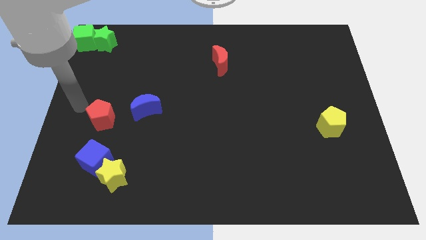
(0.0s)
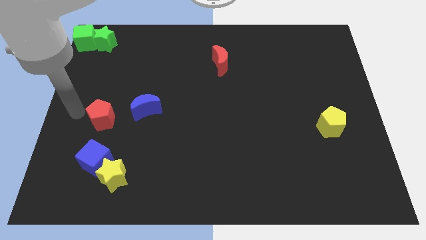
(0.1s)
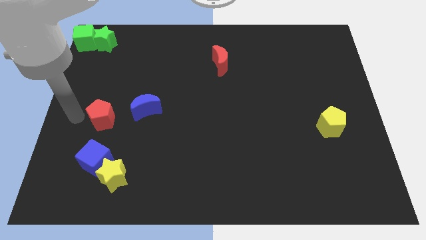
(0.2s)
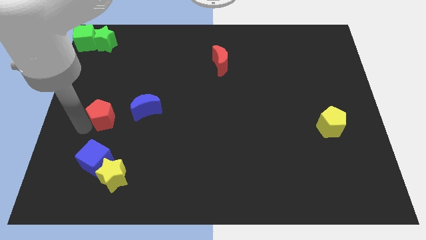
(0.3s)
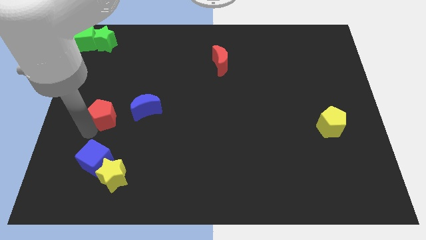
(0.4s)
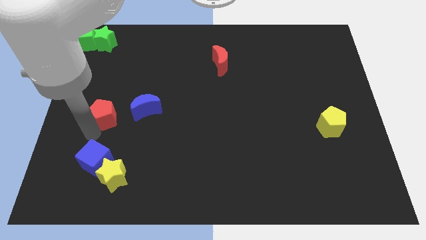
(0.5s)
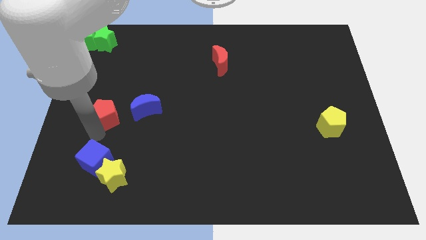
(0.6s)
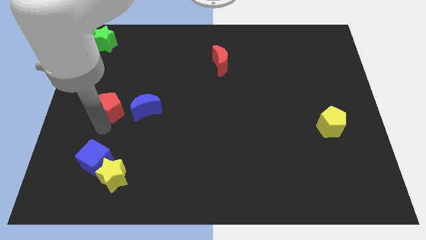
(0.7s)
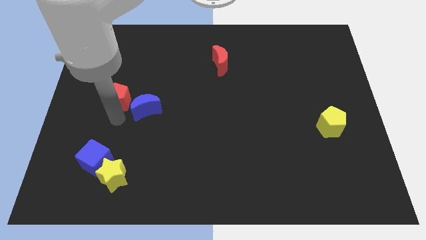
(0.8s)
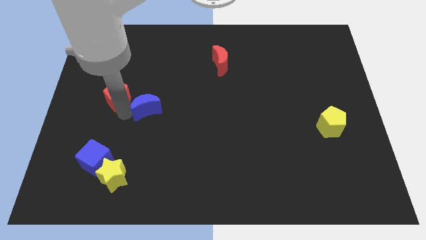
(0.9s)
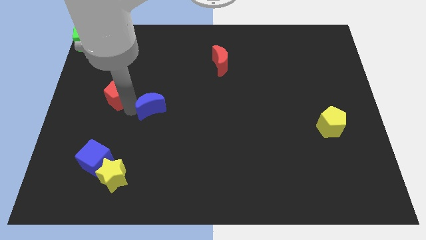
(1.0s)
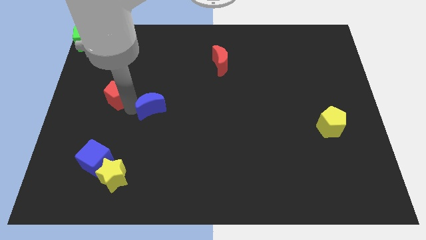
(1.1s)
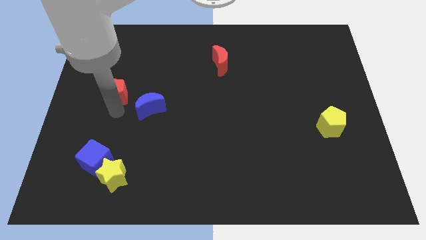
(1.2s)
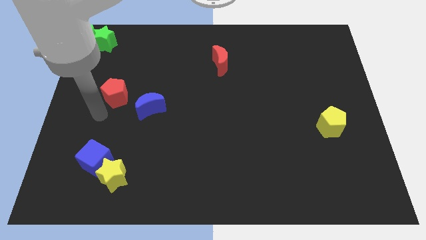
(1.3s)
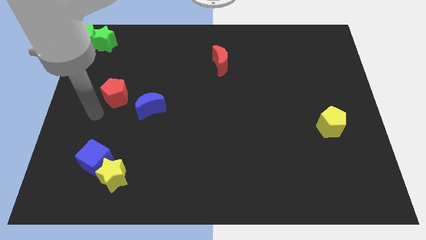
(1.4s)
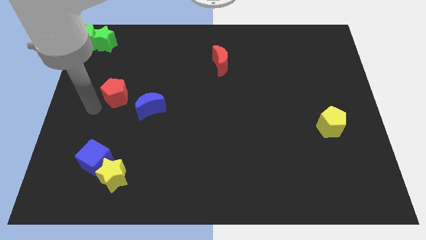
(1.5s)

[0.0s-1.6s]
move the red pentagon diagonally top left to the blue moon

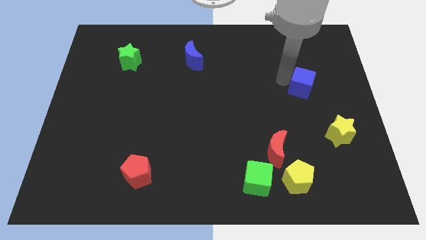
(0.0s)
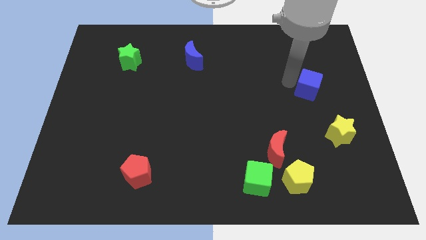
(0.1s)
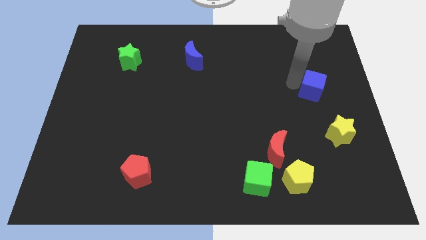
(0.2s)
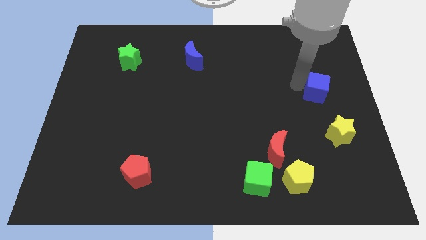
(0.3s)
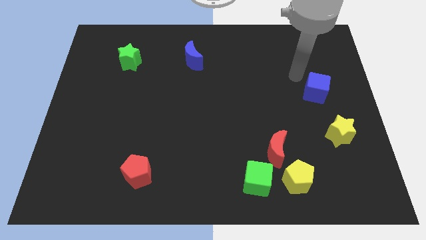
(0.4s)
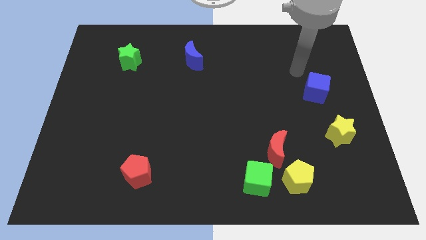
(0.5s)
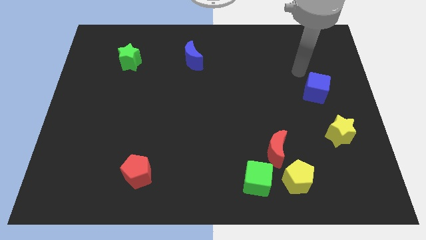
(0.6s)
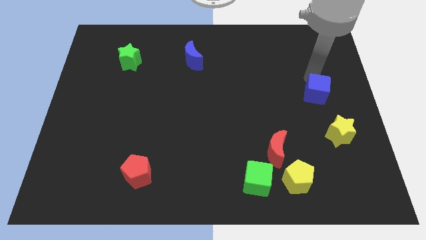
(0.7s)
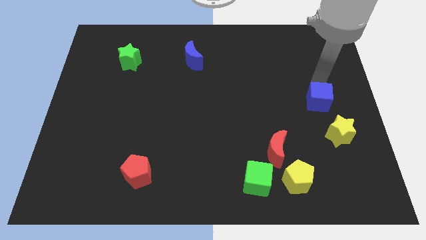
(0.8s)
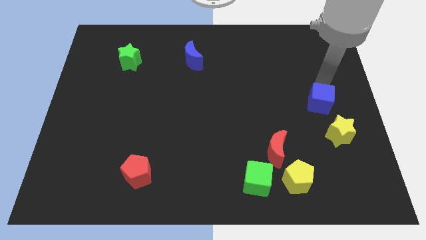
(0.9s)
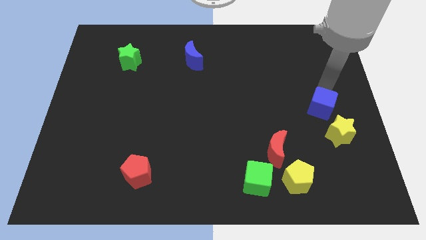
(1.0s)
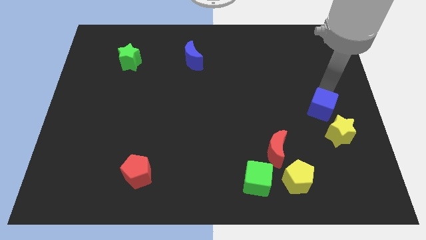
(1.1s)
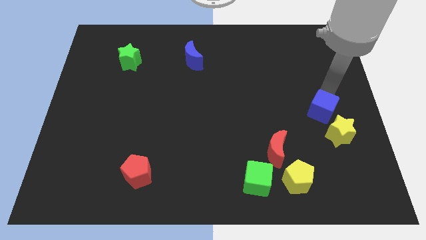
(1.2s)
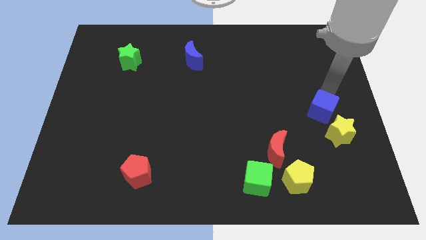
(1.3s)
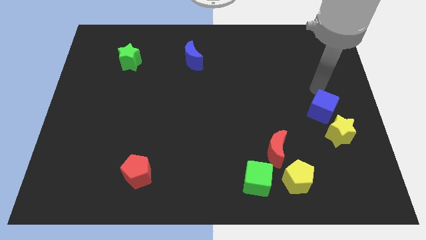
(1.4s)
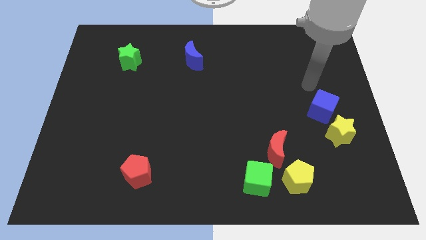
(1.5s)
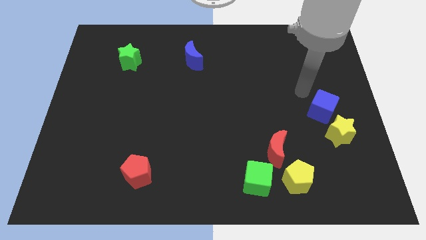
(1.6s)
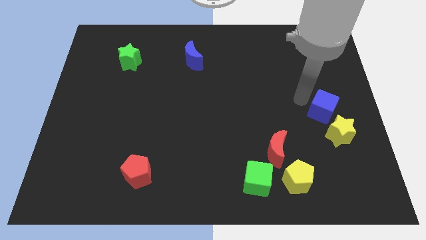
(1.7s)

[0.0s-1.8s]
move the blue cube towards yellow star

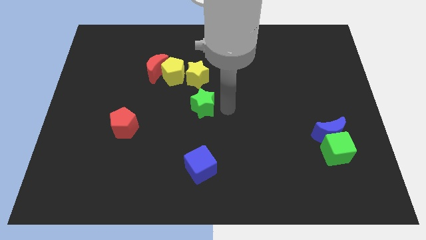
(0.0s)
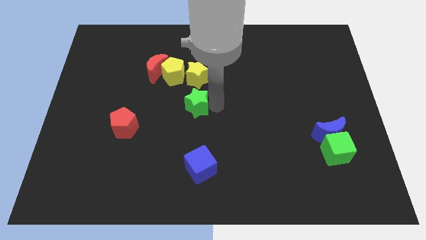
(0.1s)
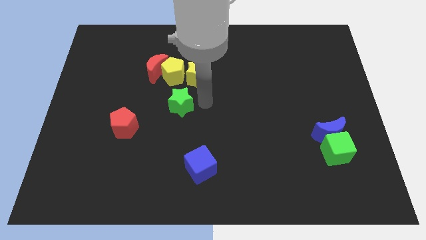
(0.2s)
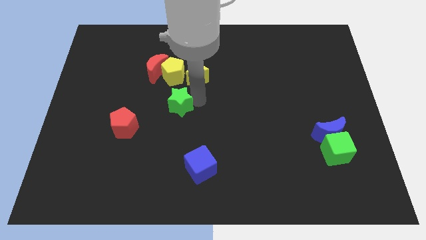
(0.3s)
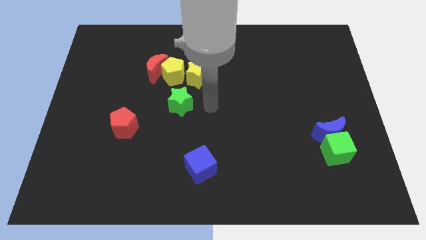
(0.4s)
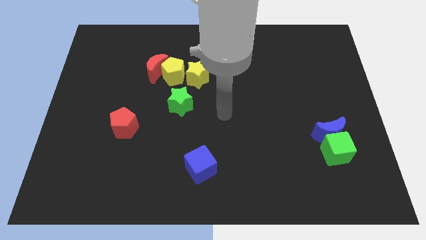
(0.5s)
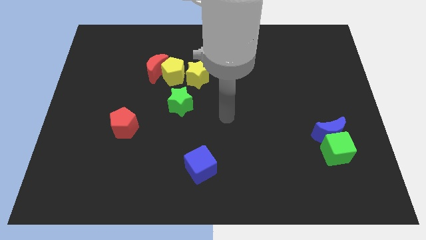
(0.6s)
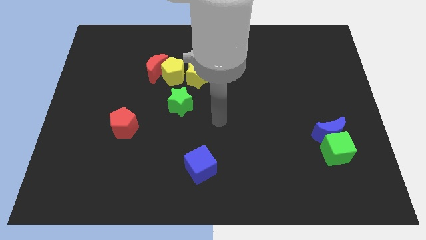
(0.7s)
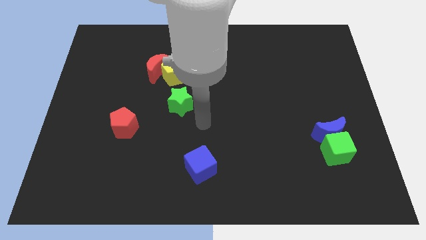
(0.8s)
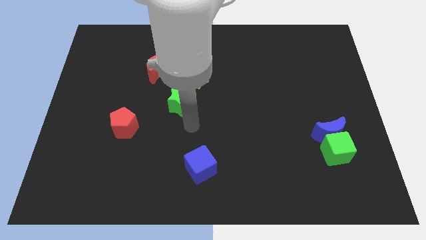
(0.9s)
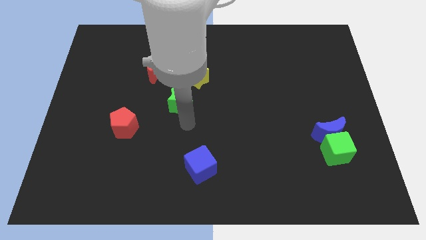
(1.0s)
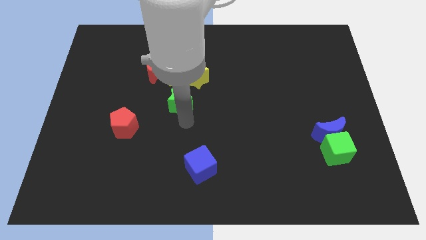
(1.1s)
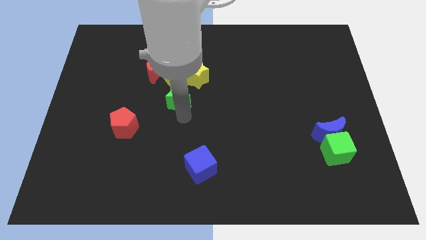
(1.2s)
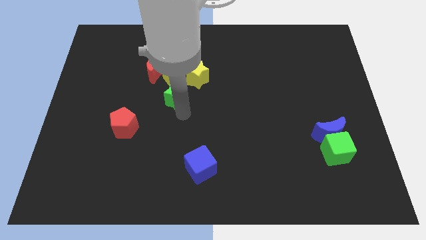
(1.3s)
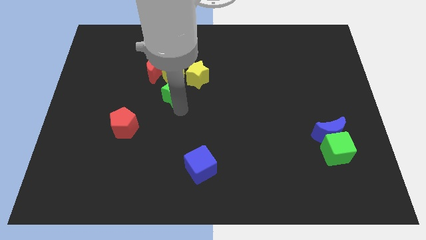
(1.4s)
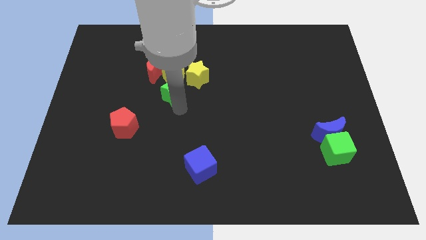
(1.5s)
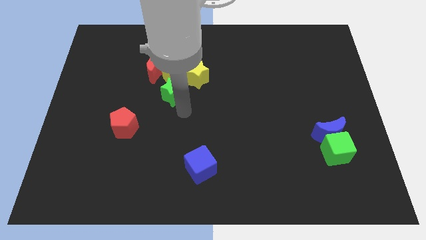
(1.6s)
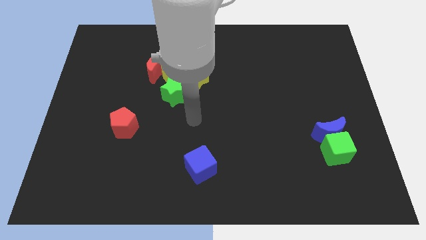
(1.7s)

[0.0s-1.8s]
push the green star to the bottom side of the yellow pentagon

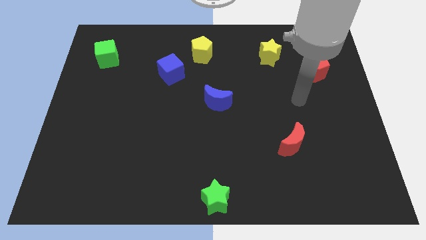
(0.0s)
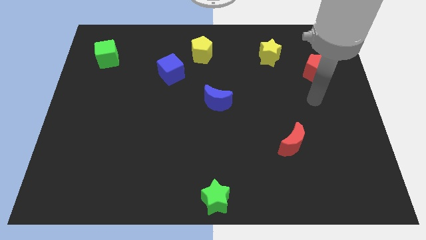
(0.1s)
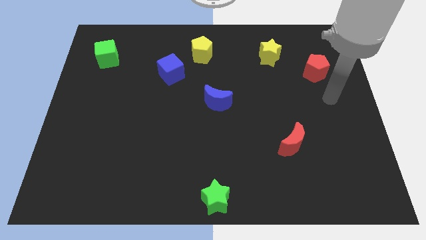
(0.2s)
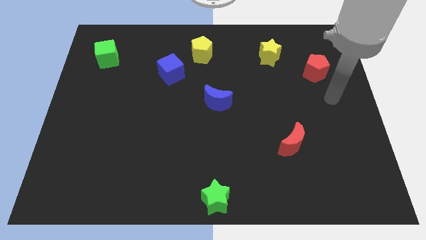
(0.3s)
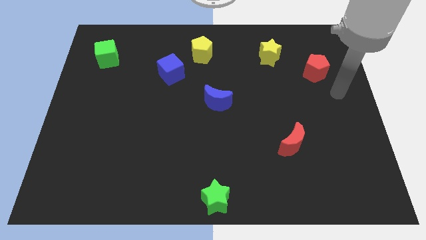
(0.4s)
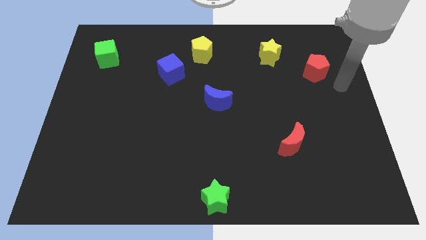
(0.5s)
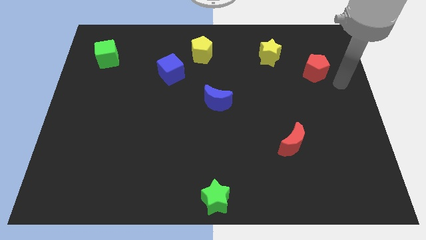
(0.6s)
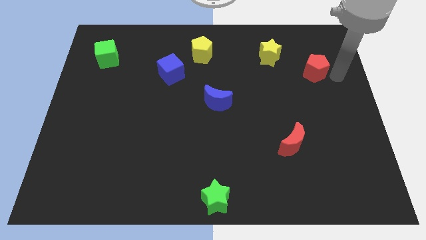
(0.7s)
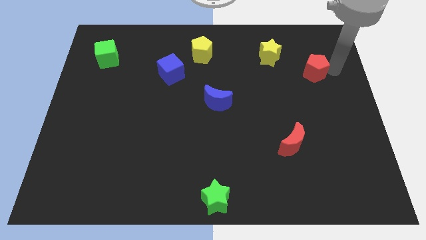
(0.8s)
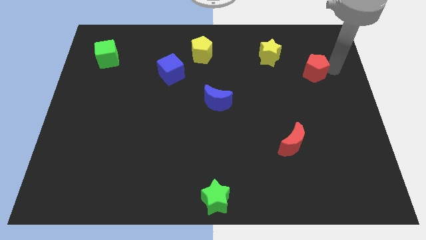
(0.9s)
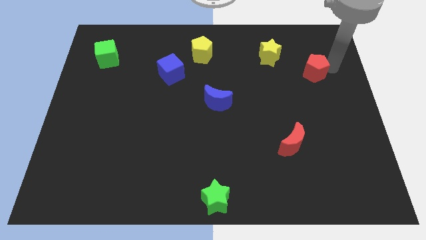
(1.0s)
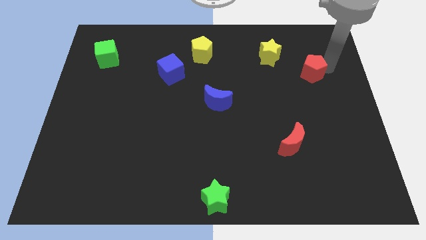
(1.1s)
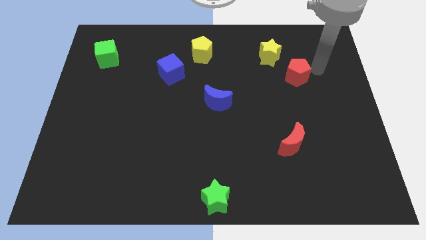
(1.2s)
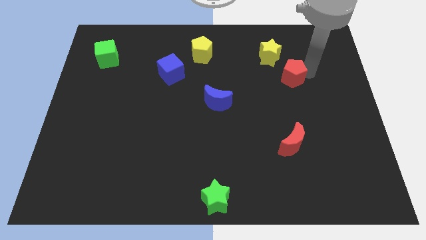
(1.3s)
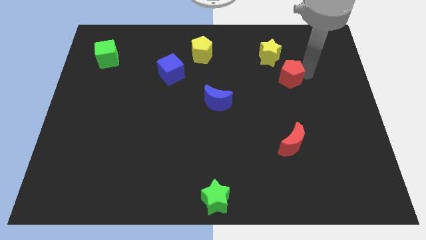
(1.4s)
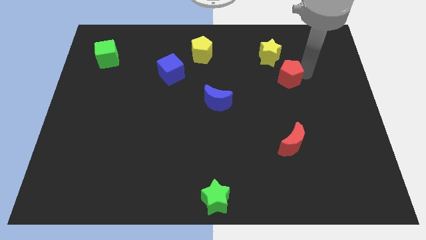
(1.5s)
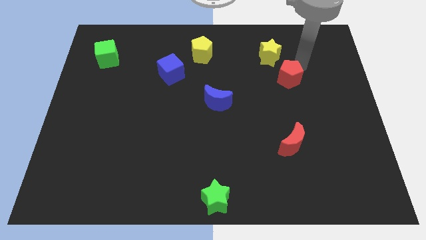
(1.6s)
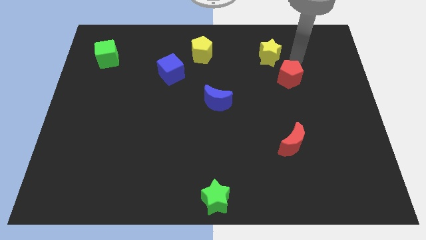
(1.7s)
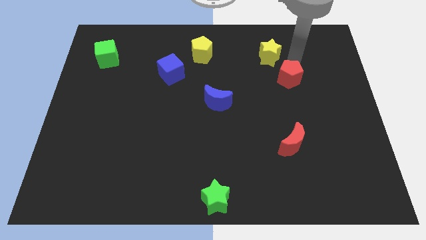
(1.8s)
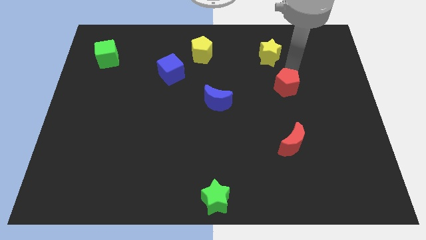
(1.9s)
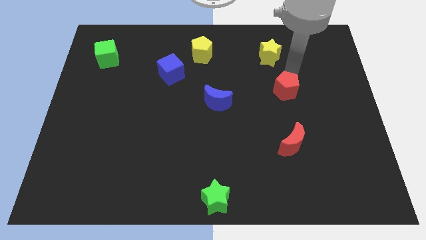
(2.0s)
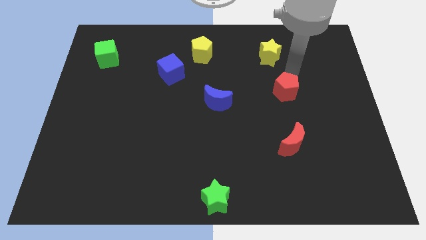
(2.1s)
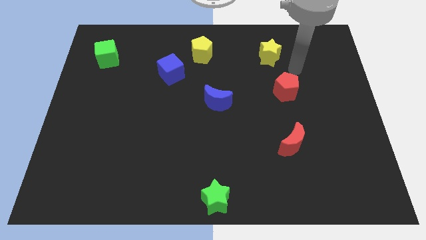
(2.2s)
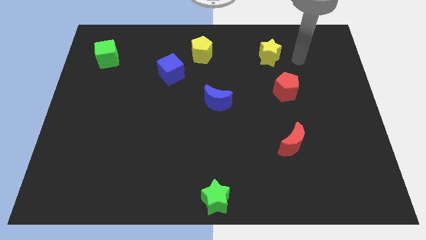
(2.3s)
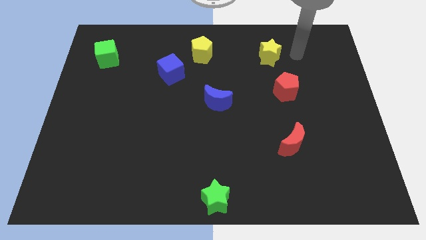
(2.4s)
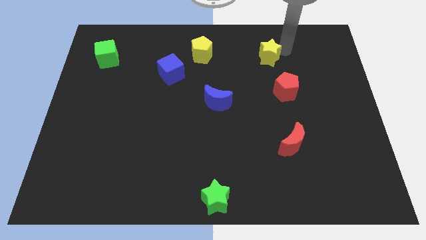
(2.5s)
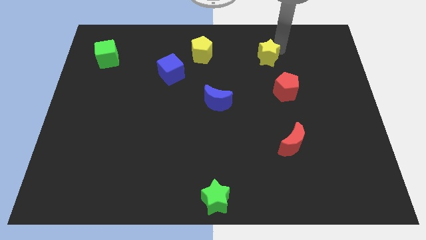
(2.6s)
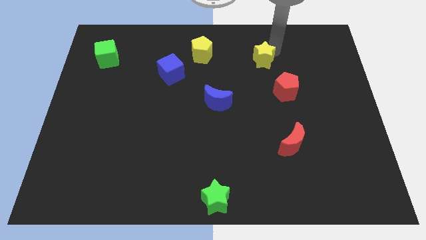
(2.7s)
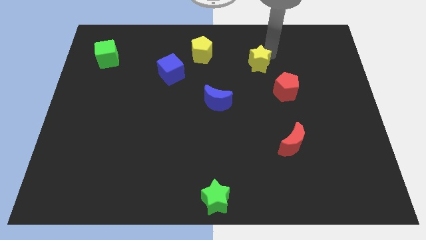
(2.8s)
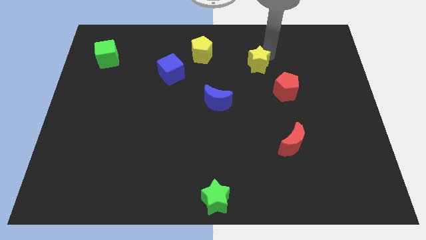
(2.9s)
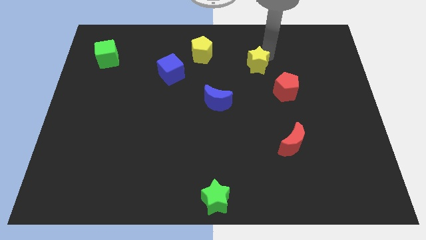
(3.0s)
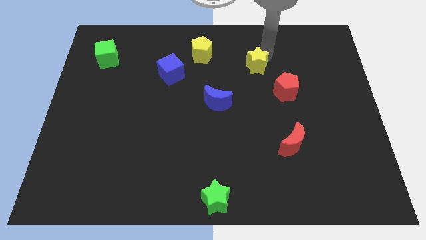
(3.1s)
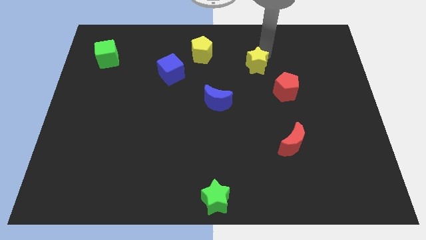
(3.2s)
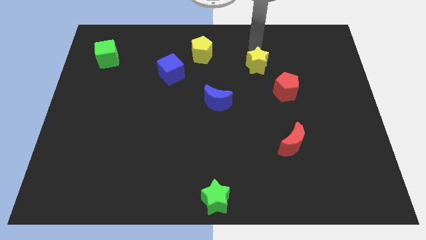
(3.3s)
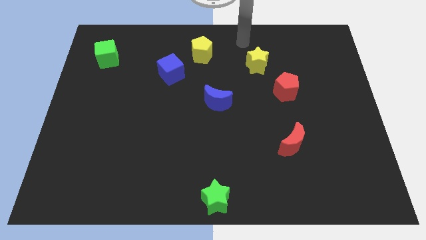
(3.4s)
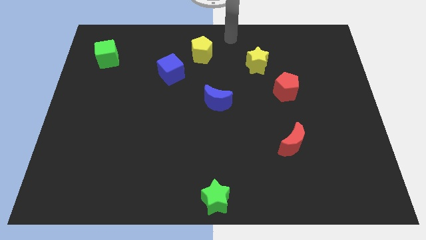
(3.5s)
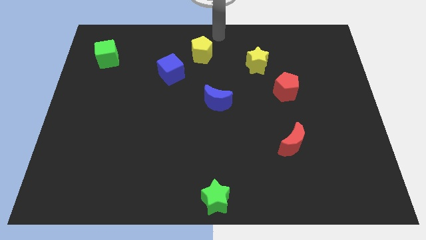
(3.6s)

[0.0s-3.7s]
slightly move to the bottom side of the yellow star

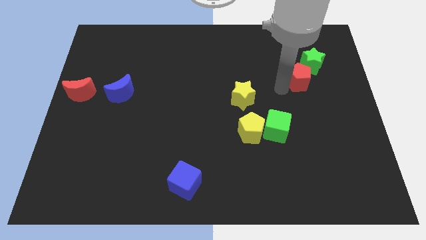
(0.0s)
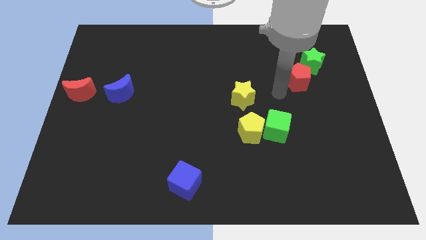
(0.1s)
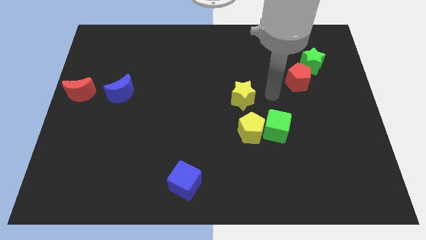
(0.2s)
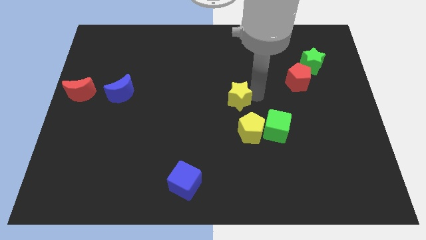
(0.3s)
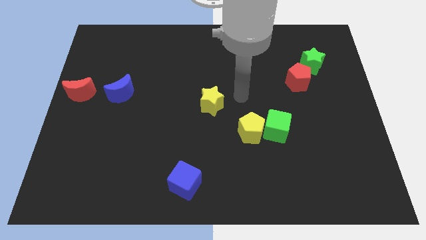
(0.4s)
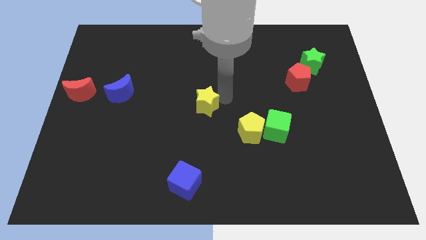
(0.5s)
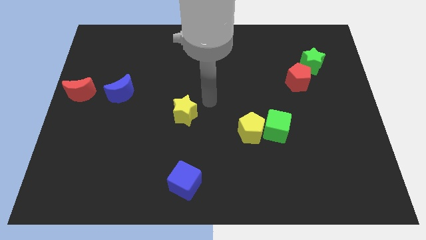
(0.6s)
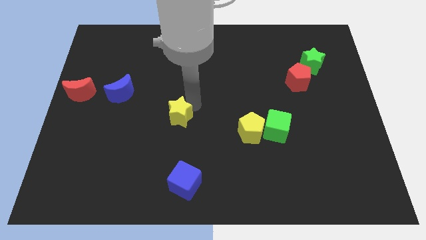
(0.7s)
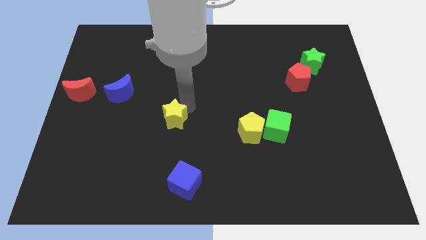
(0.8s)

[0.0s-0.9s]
place yellow star above the blue cube
